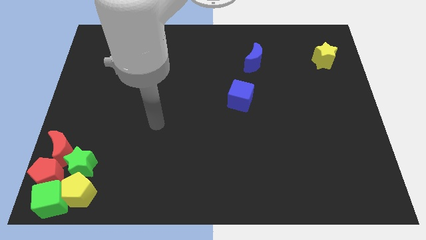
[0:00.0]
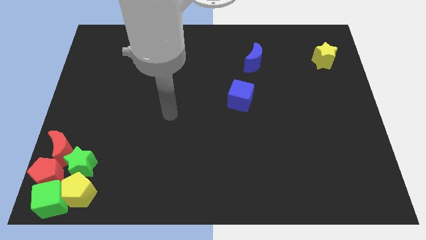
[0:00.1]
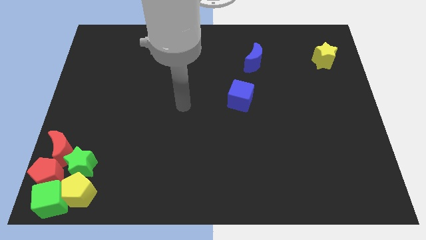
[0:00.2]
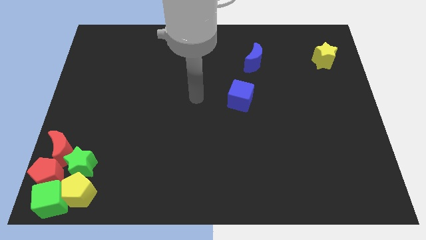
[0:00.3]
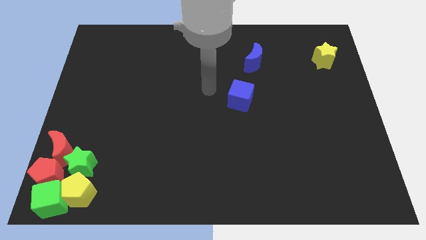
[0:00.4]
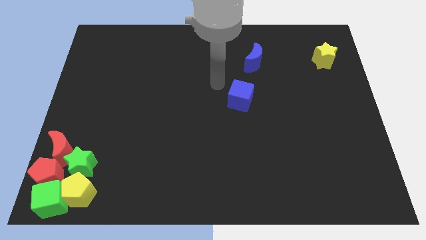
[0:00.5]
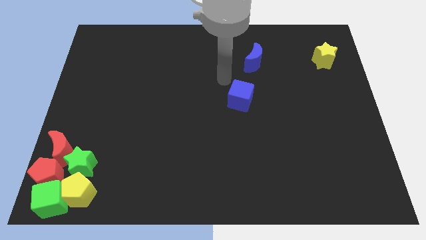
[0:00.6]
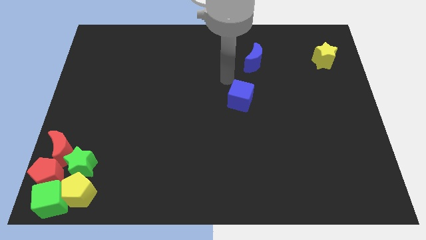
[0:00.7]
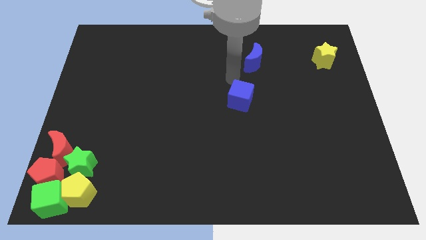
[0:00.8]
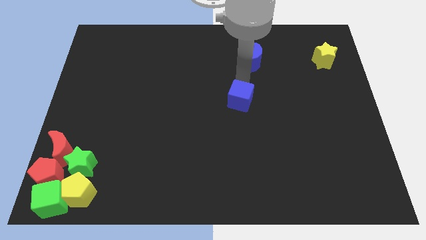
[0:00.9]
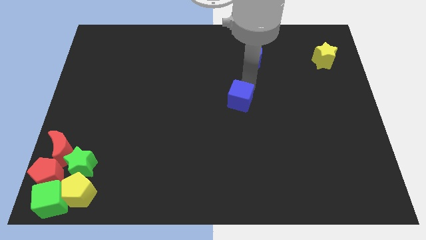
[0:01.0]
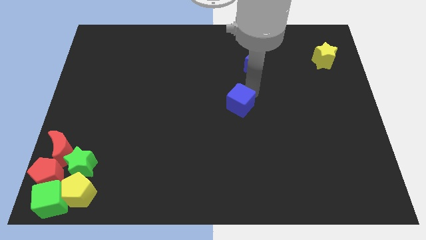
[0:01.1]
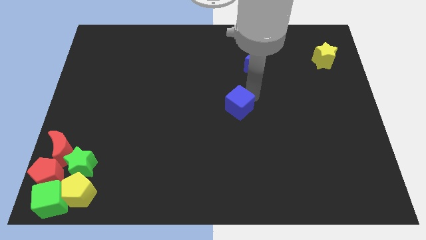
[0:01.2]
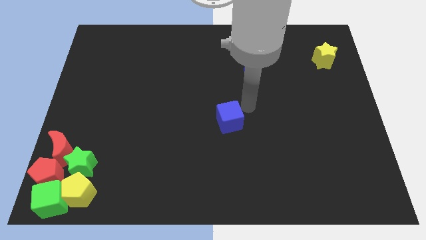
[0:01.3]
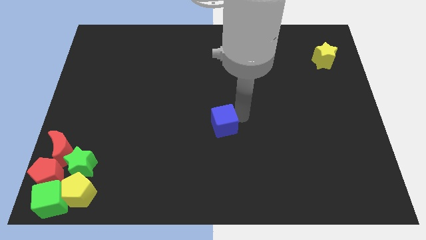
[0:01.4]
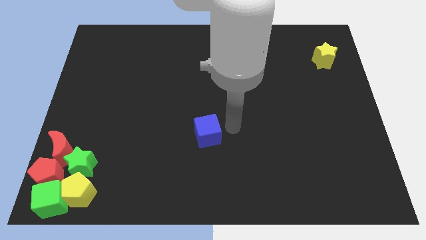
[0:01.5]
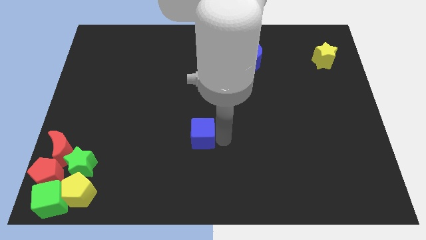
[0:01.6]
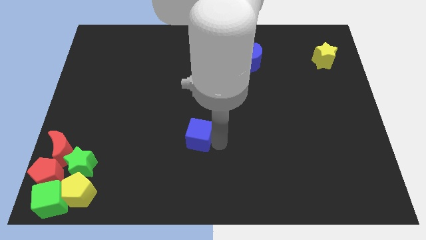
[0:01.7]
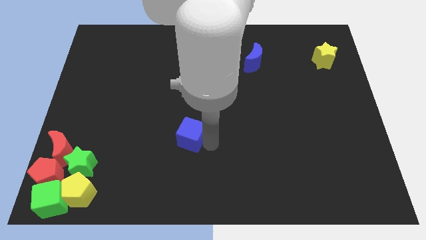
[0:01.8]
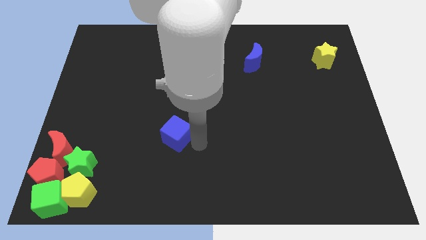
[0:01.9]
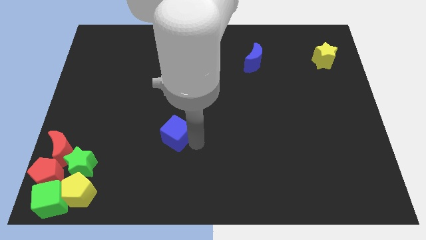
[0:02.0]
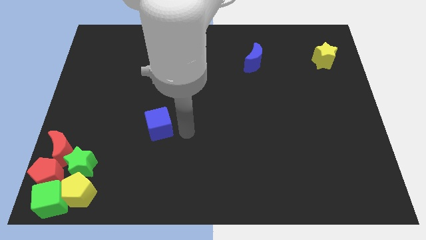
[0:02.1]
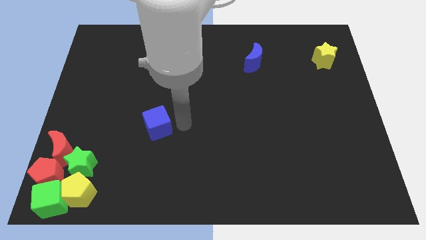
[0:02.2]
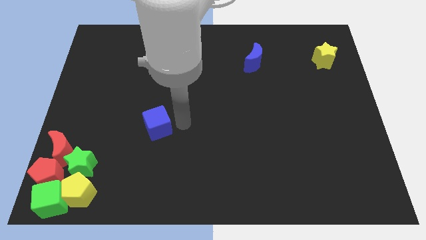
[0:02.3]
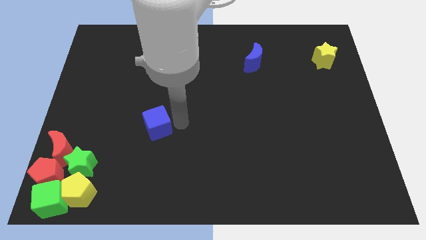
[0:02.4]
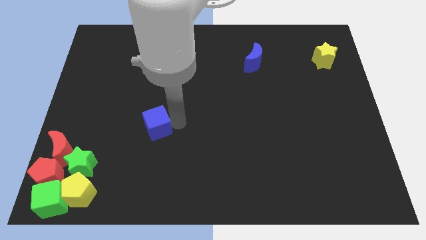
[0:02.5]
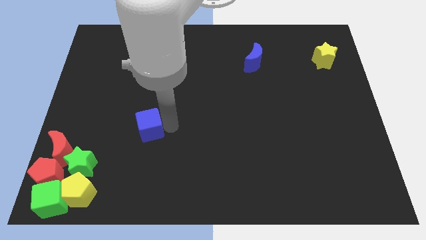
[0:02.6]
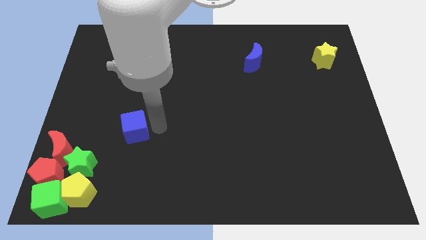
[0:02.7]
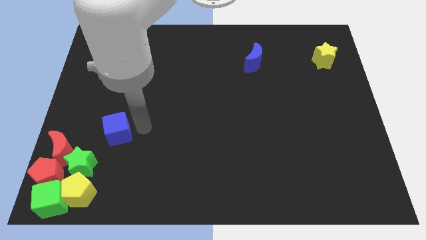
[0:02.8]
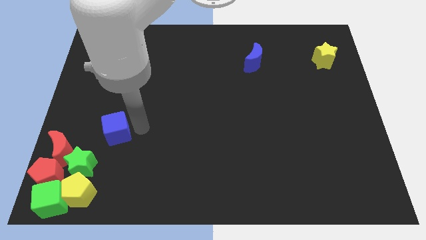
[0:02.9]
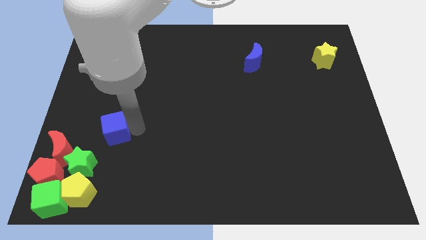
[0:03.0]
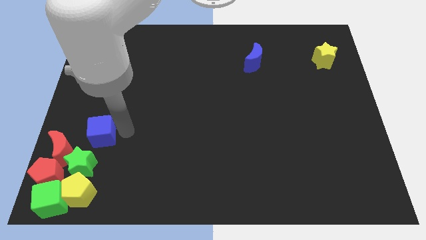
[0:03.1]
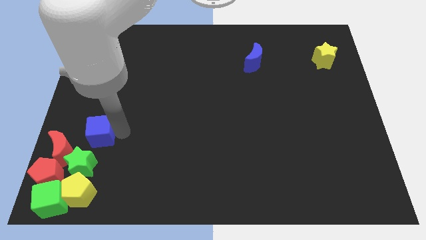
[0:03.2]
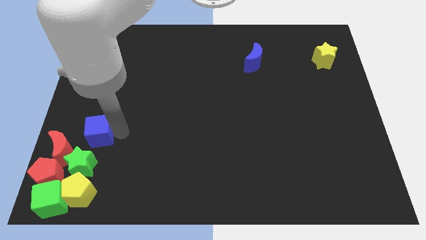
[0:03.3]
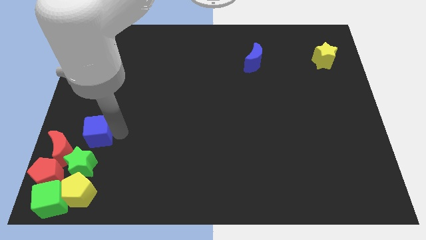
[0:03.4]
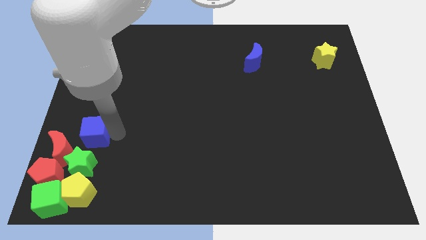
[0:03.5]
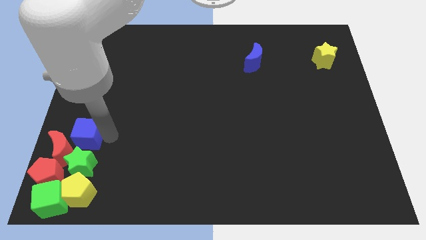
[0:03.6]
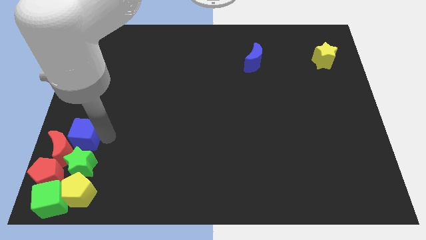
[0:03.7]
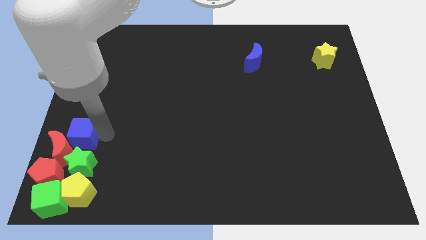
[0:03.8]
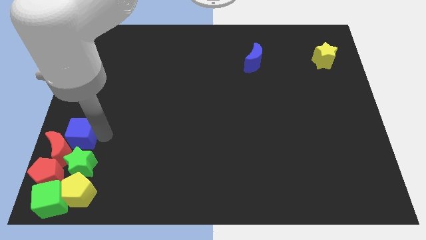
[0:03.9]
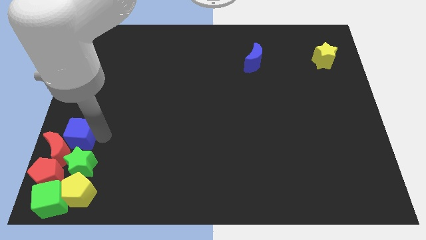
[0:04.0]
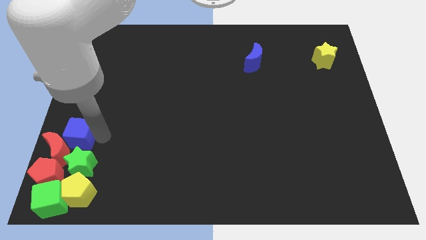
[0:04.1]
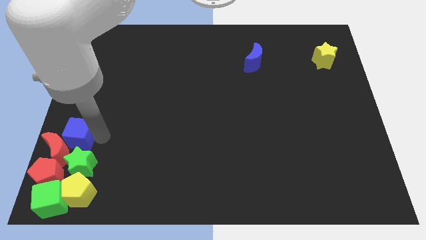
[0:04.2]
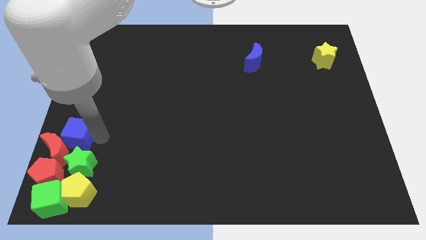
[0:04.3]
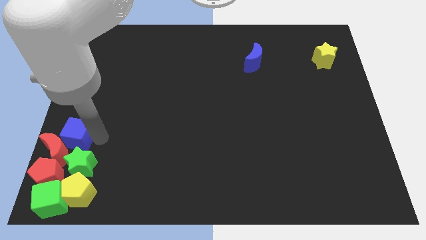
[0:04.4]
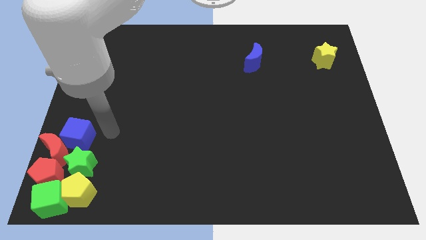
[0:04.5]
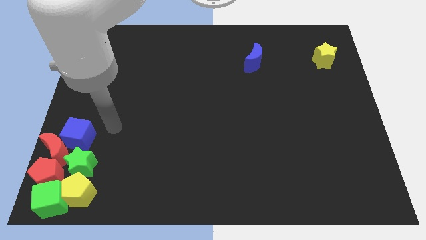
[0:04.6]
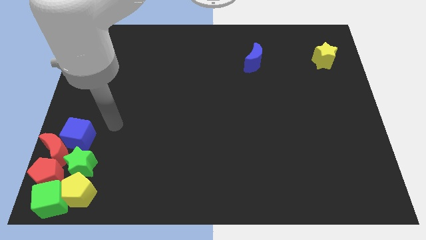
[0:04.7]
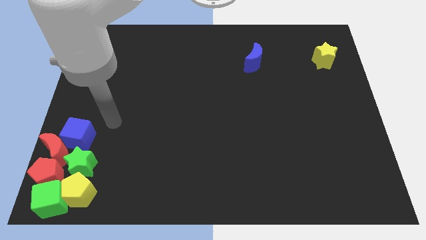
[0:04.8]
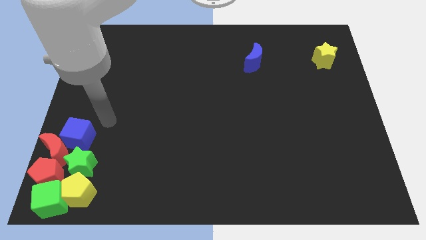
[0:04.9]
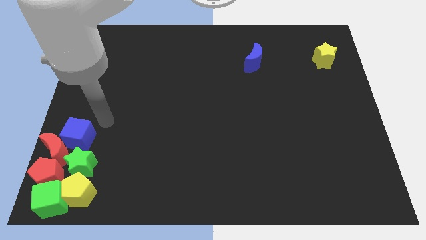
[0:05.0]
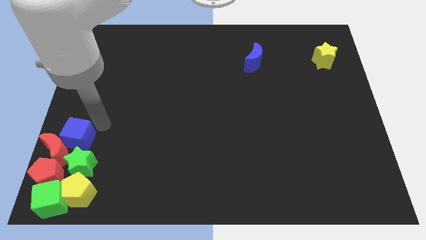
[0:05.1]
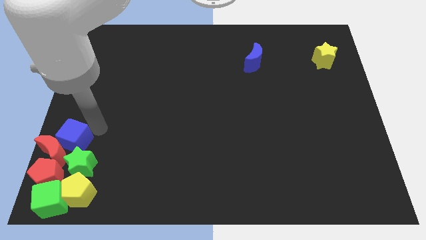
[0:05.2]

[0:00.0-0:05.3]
move the blue cube into the group of blocks

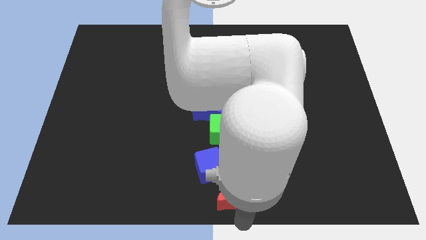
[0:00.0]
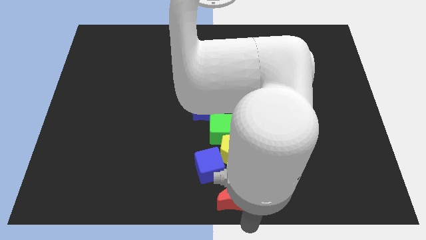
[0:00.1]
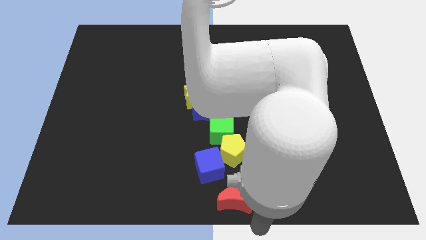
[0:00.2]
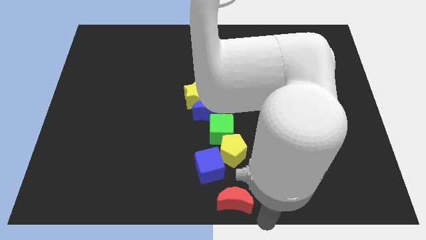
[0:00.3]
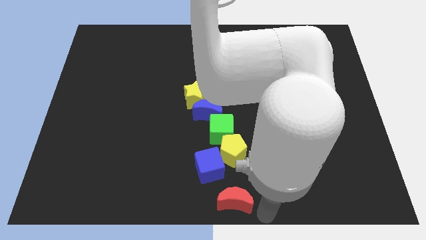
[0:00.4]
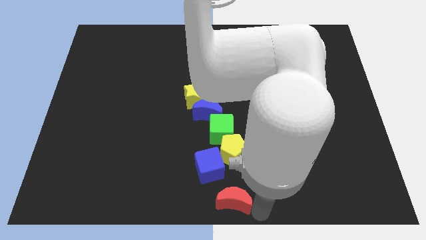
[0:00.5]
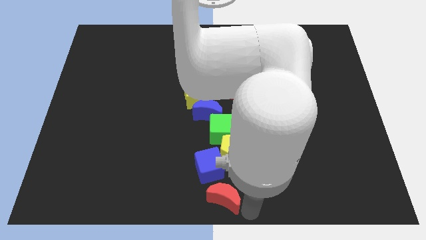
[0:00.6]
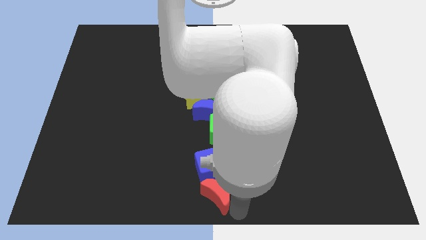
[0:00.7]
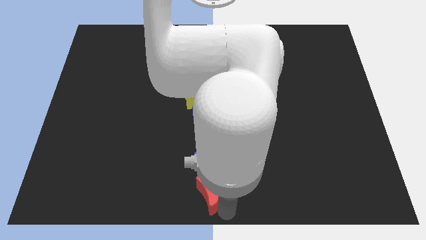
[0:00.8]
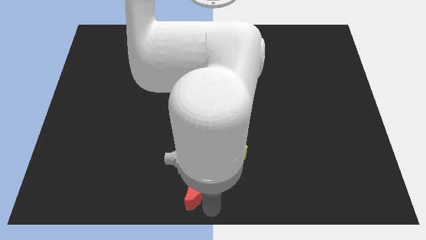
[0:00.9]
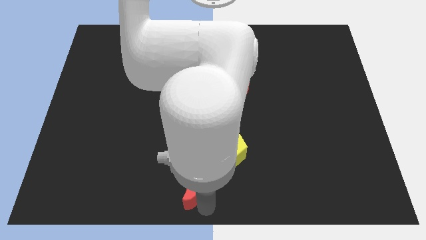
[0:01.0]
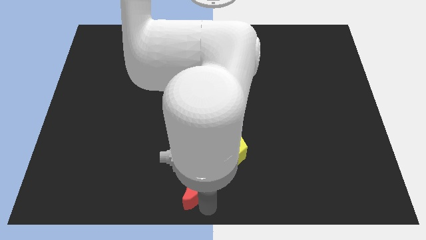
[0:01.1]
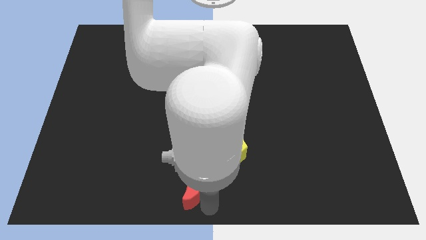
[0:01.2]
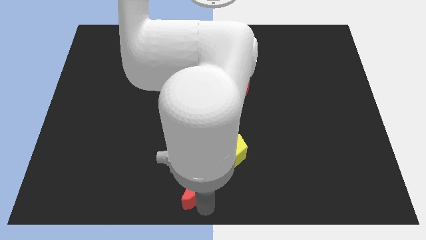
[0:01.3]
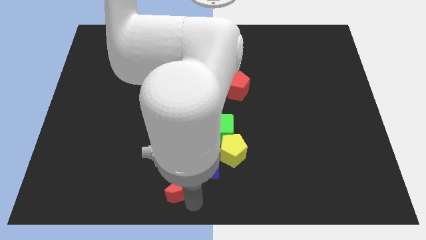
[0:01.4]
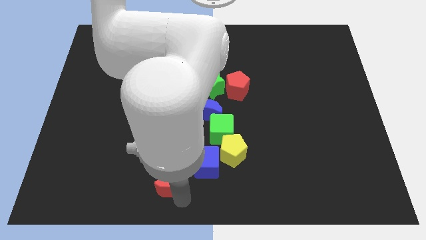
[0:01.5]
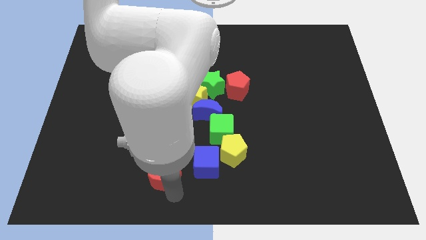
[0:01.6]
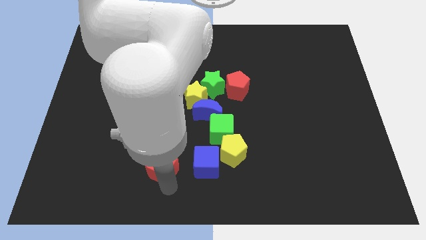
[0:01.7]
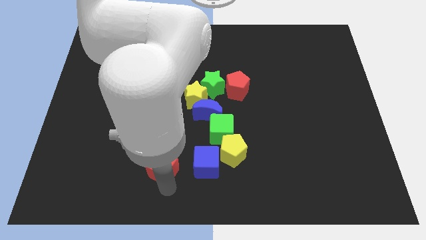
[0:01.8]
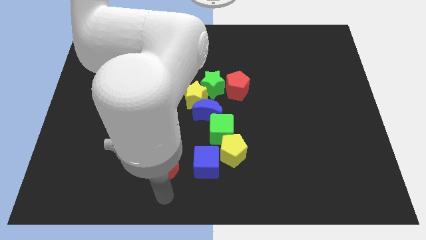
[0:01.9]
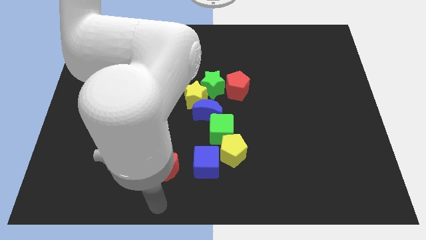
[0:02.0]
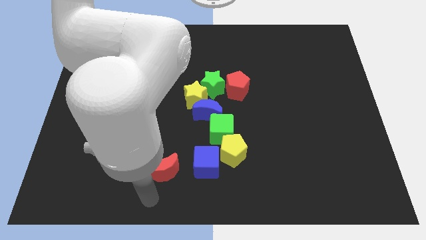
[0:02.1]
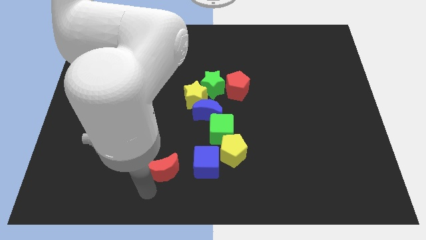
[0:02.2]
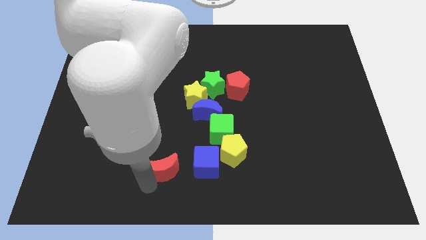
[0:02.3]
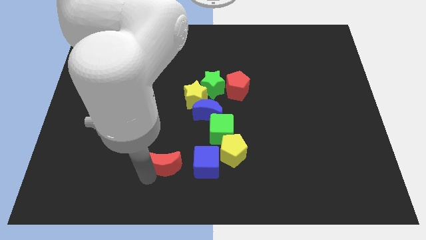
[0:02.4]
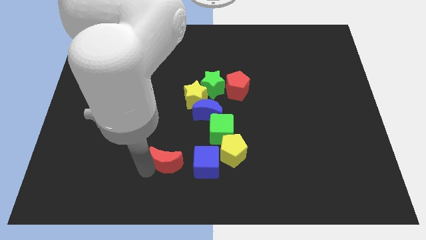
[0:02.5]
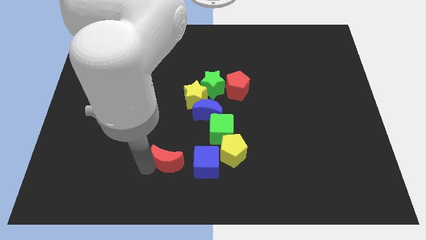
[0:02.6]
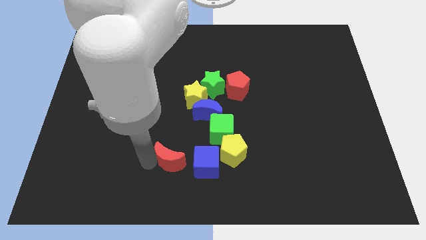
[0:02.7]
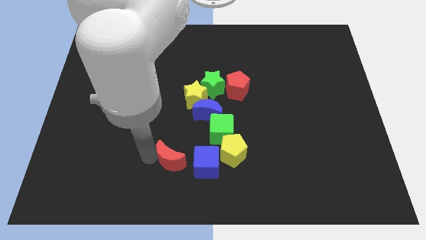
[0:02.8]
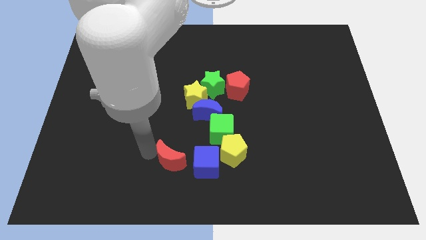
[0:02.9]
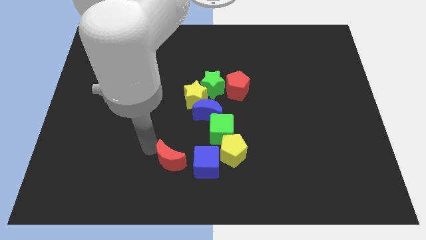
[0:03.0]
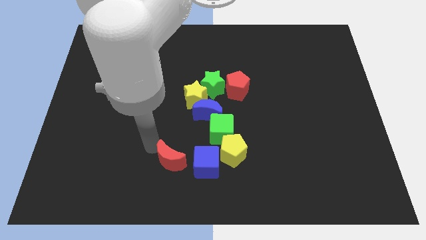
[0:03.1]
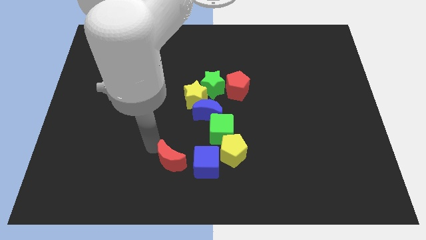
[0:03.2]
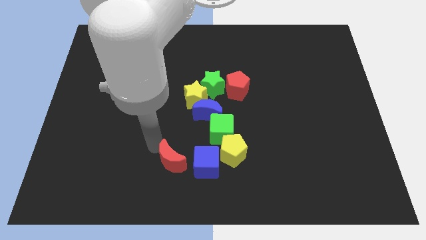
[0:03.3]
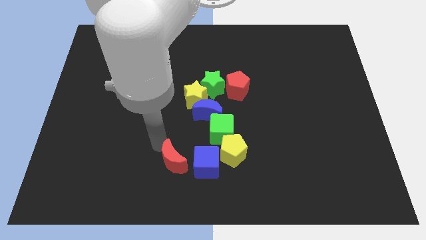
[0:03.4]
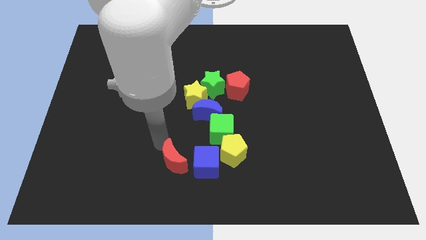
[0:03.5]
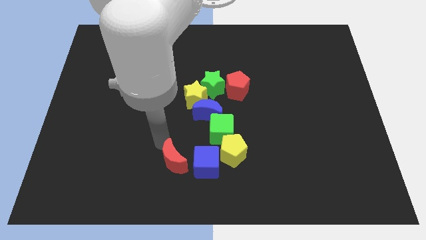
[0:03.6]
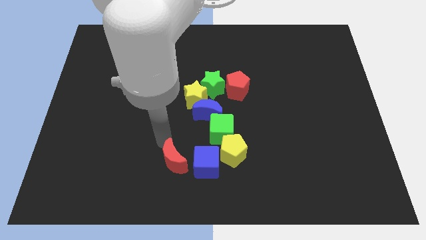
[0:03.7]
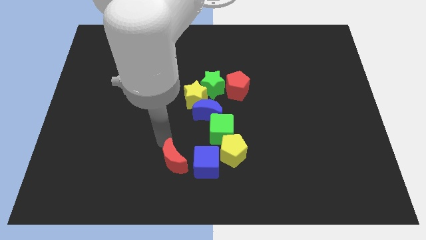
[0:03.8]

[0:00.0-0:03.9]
place the red crescent to the left side of the blue cube
